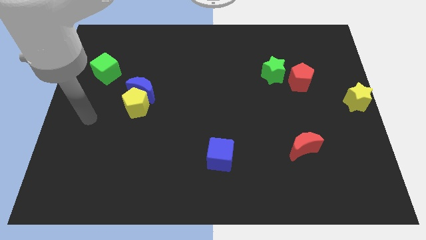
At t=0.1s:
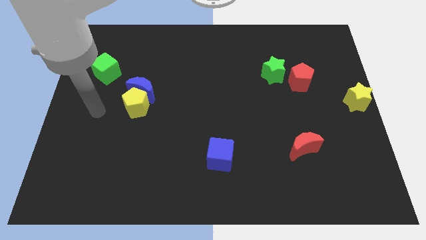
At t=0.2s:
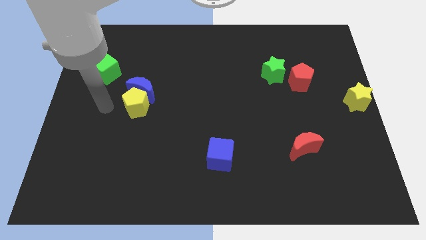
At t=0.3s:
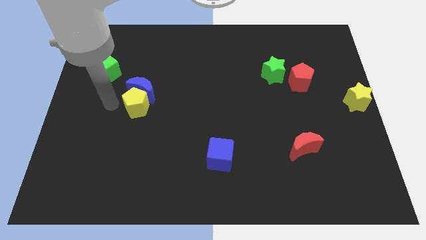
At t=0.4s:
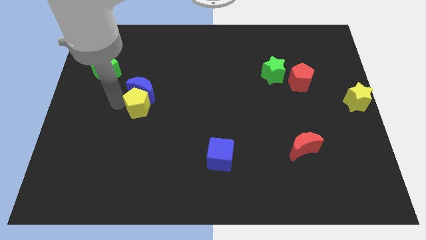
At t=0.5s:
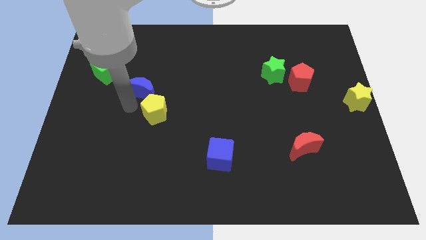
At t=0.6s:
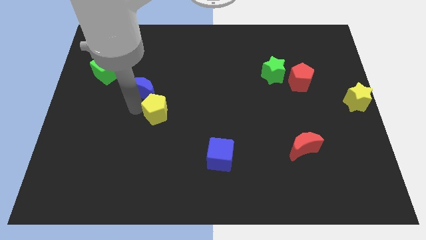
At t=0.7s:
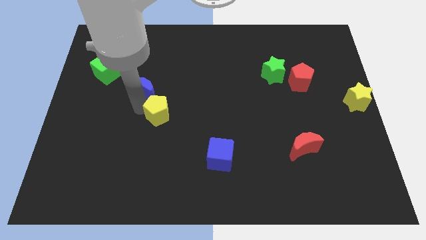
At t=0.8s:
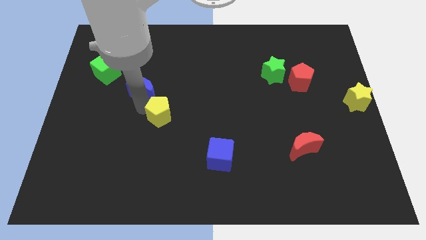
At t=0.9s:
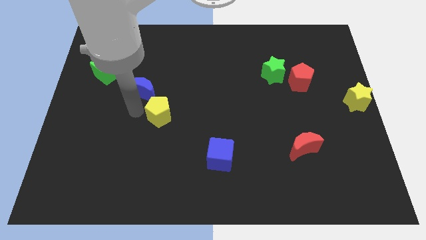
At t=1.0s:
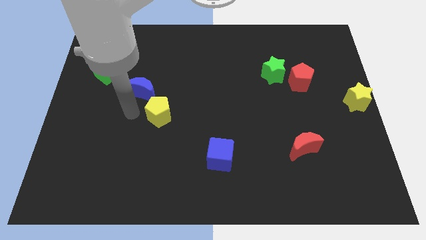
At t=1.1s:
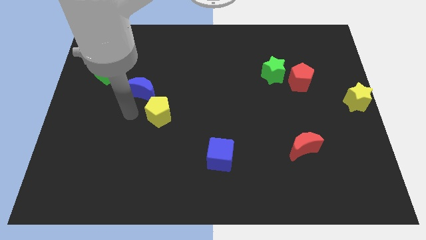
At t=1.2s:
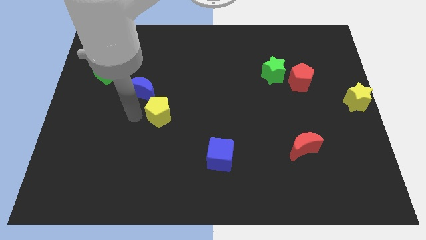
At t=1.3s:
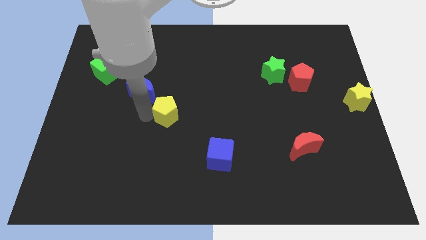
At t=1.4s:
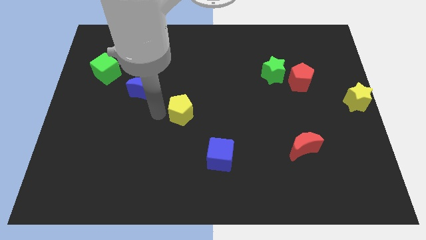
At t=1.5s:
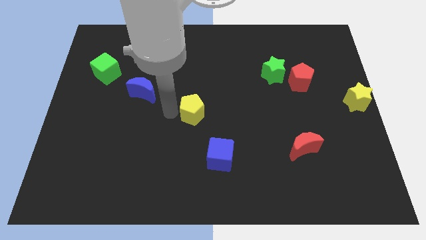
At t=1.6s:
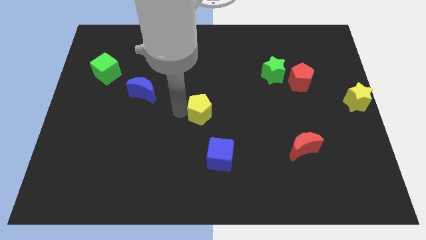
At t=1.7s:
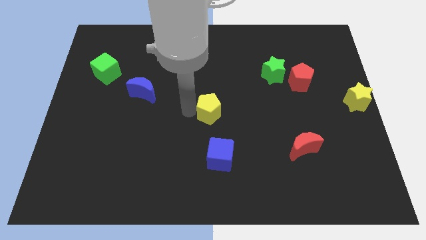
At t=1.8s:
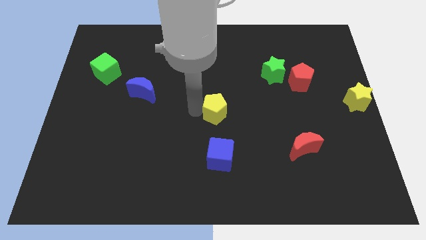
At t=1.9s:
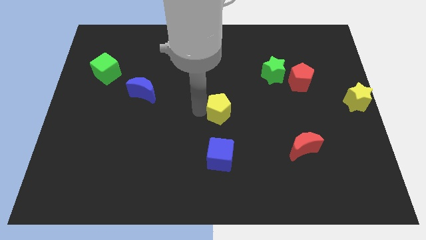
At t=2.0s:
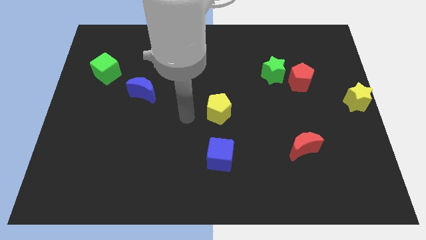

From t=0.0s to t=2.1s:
slide yellow pentagon to the top of blue cube

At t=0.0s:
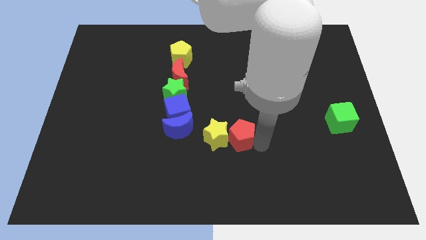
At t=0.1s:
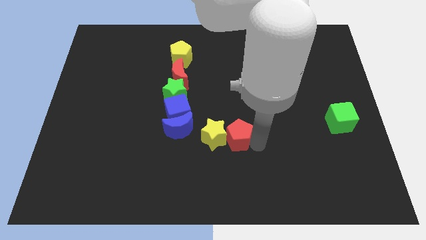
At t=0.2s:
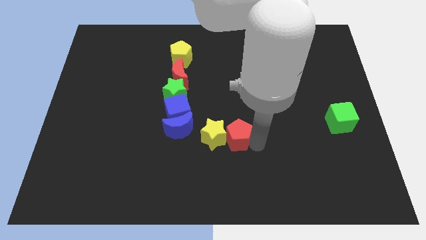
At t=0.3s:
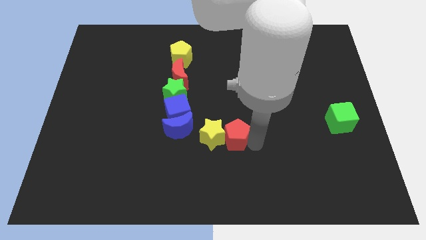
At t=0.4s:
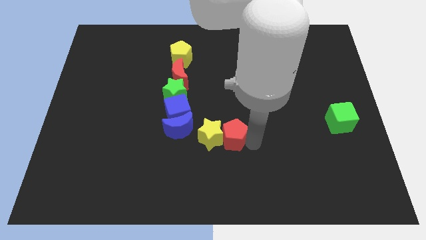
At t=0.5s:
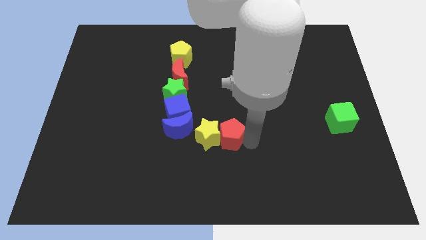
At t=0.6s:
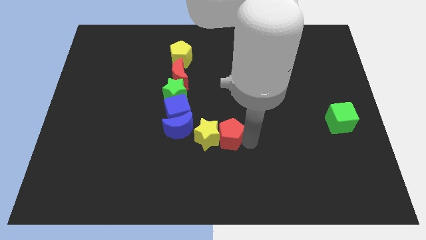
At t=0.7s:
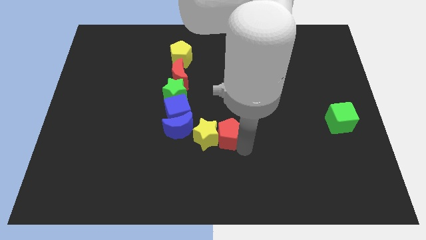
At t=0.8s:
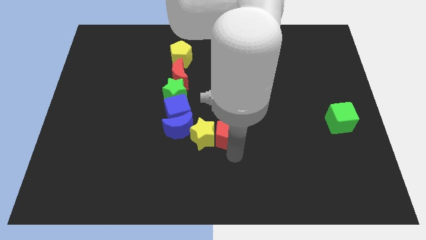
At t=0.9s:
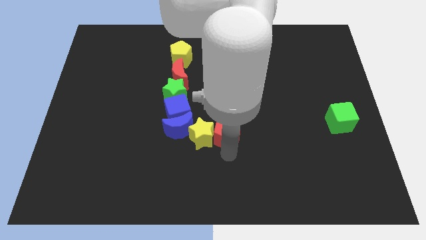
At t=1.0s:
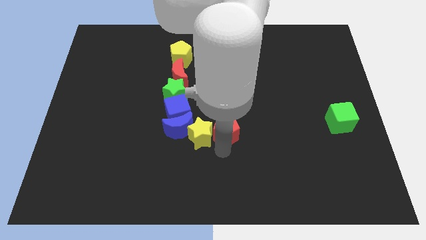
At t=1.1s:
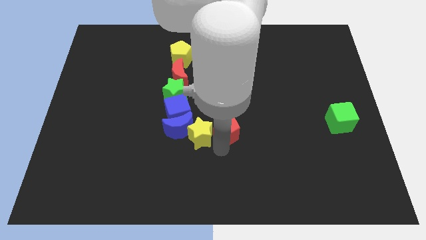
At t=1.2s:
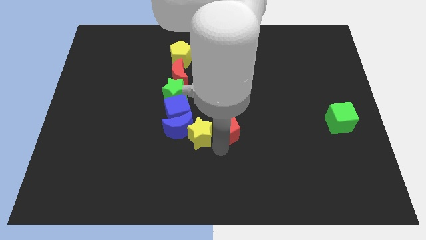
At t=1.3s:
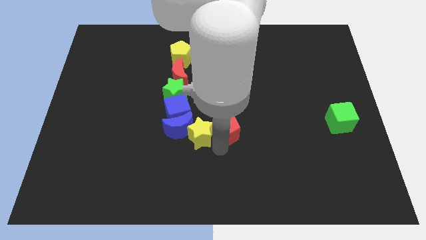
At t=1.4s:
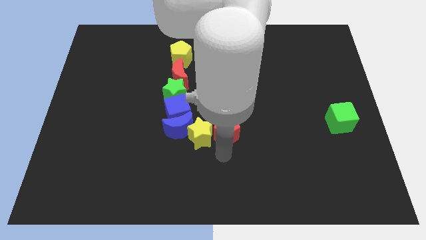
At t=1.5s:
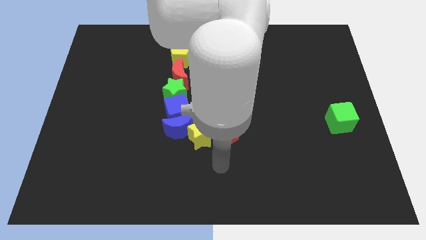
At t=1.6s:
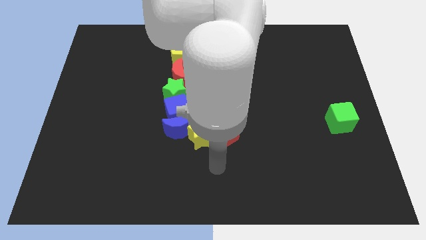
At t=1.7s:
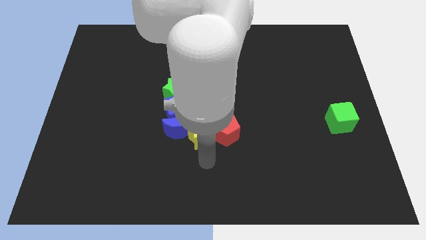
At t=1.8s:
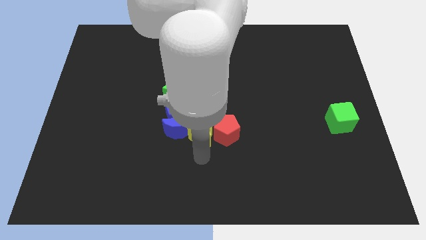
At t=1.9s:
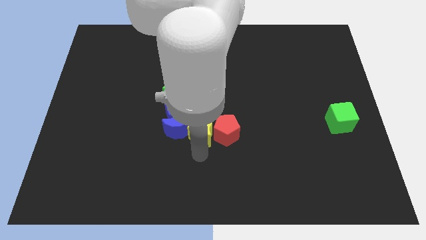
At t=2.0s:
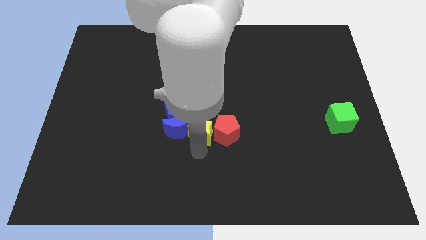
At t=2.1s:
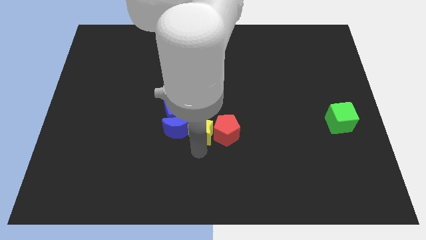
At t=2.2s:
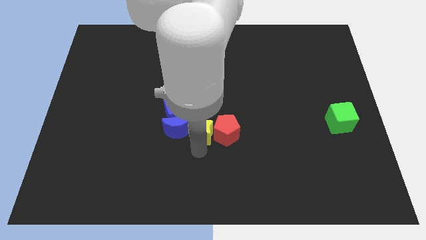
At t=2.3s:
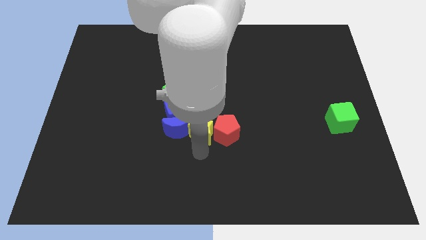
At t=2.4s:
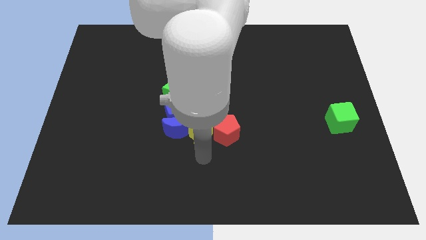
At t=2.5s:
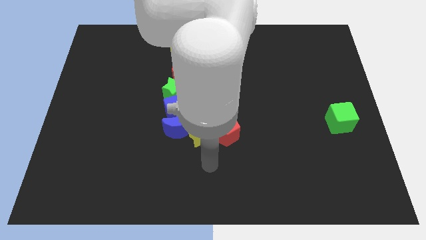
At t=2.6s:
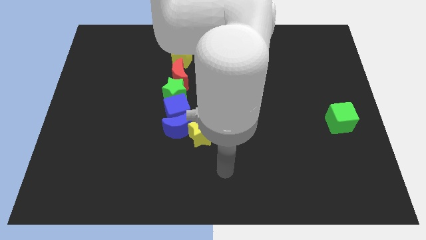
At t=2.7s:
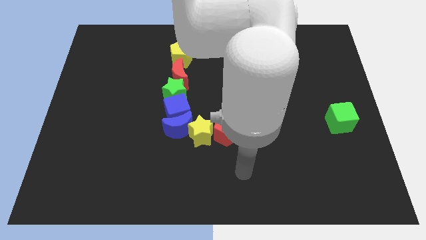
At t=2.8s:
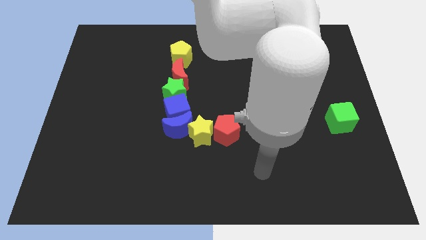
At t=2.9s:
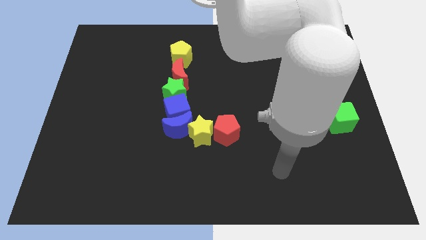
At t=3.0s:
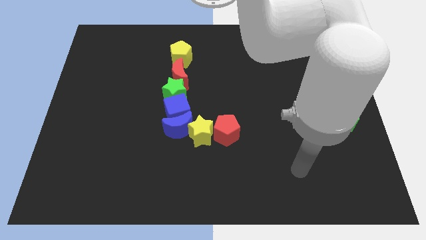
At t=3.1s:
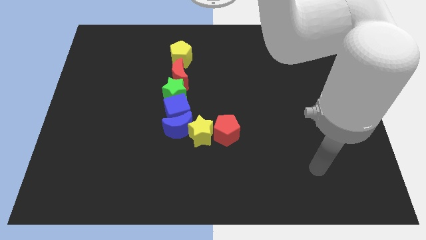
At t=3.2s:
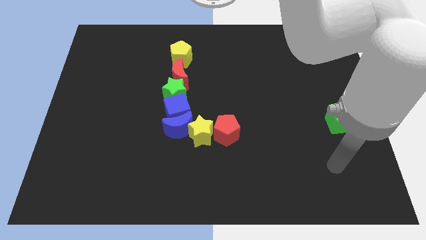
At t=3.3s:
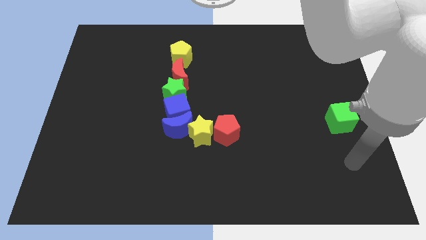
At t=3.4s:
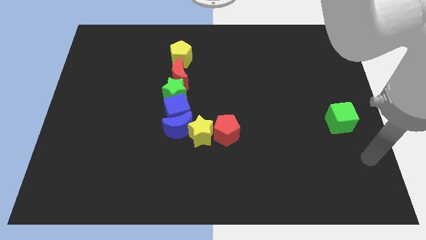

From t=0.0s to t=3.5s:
move the yellow star and the red pentagon parallel to the left of the green cube

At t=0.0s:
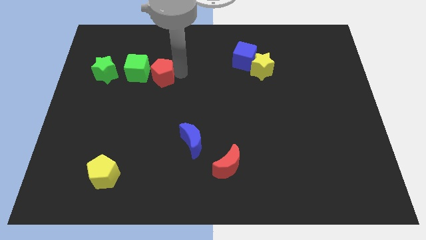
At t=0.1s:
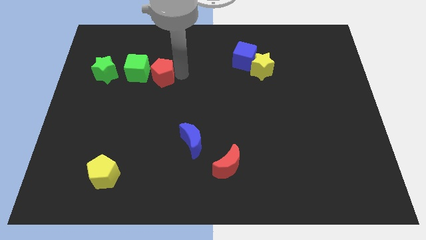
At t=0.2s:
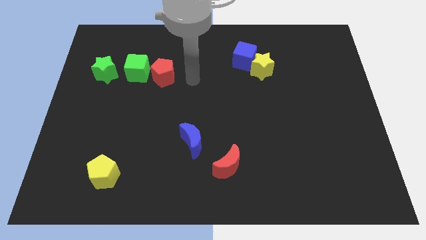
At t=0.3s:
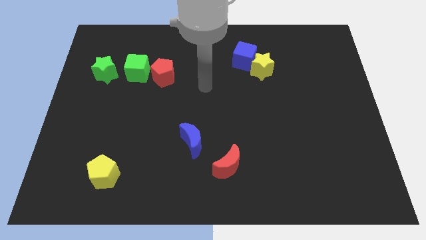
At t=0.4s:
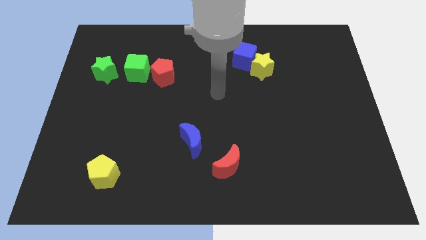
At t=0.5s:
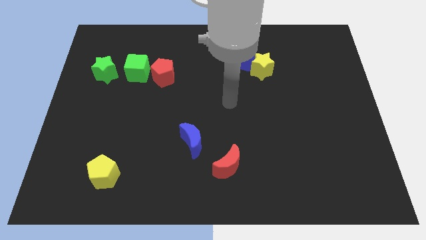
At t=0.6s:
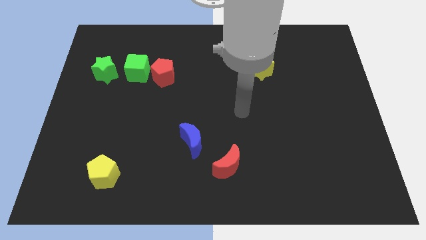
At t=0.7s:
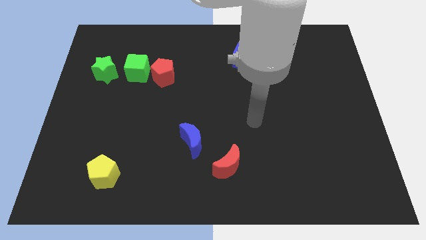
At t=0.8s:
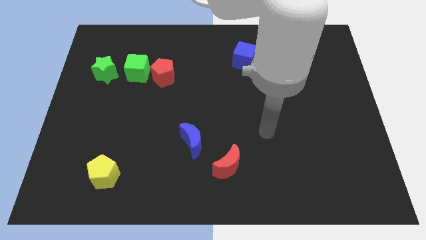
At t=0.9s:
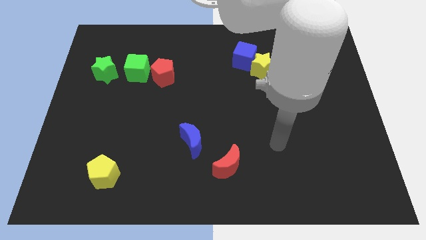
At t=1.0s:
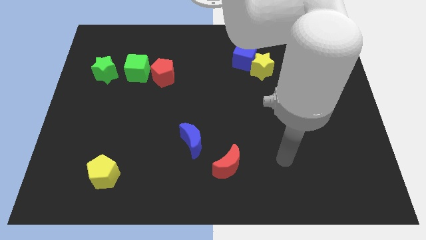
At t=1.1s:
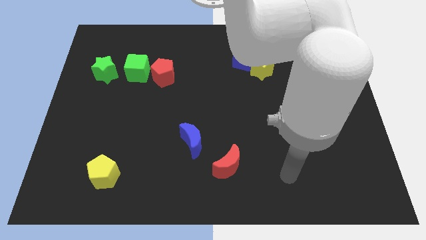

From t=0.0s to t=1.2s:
move your arm away form red pentagon

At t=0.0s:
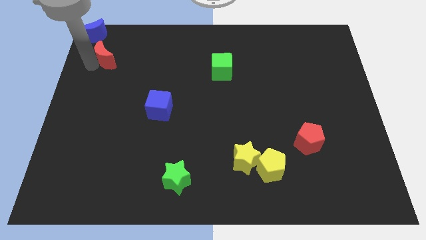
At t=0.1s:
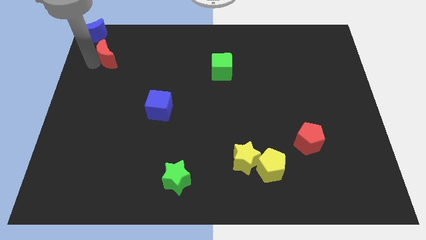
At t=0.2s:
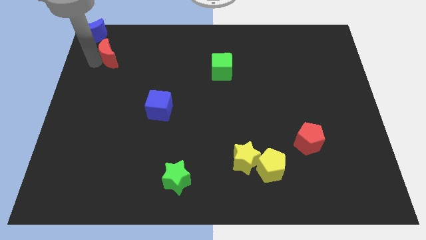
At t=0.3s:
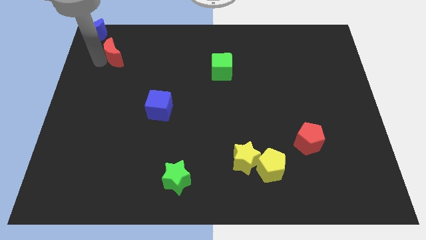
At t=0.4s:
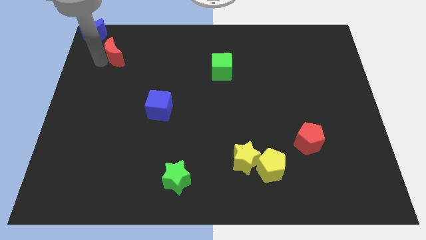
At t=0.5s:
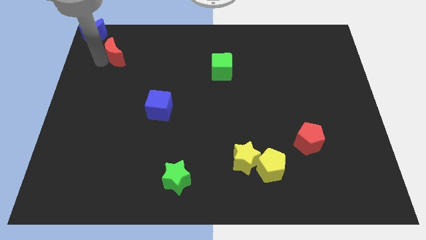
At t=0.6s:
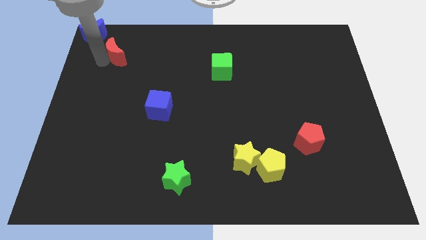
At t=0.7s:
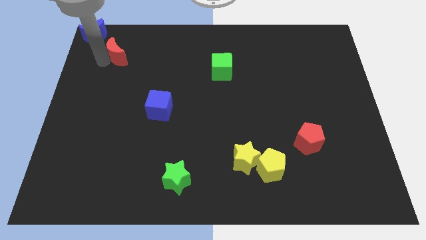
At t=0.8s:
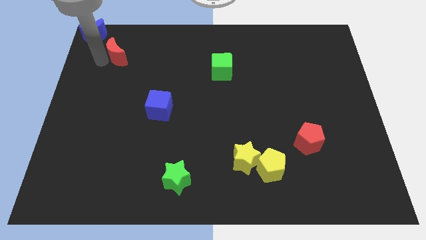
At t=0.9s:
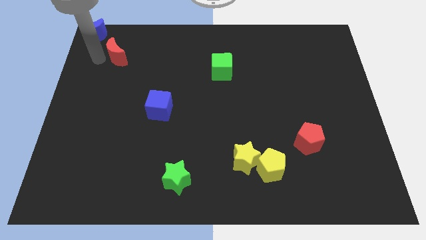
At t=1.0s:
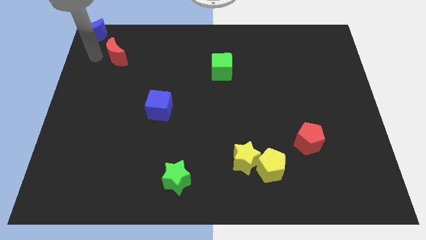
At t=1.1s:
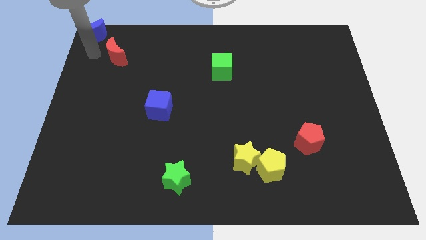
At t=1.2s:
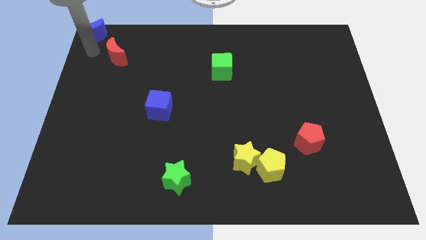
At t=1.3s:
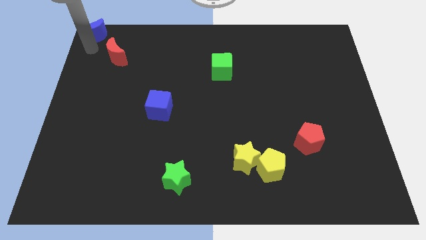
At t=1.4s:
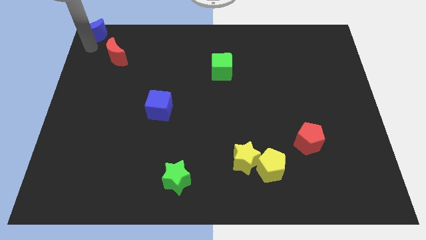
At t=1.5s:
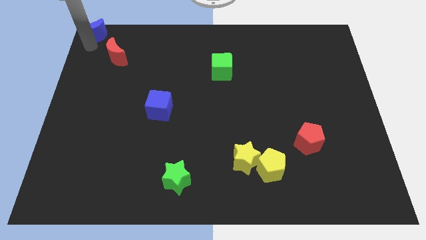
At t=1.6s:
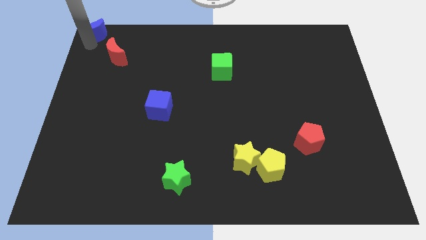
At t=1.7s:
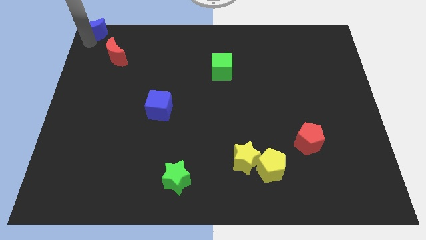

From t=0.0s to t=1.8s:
move the red crescent to the bottom right side of the blue moon

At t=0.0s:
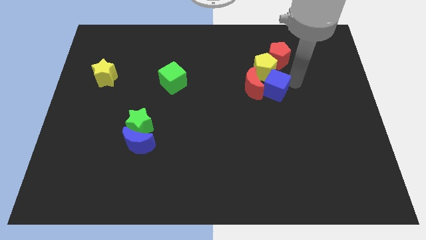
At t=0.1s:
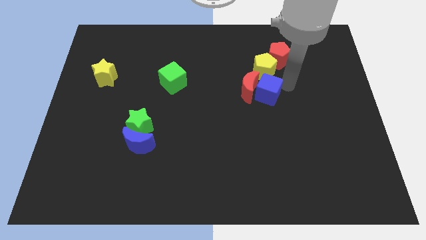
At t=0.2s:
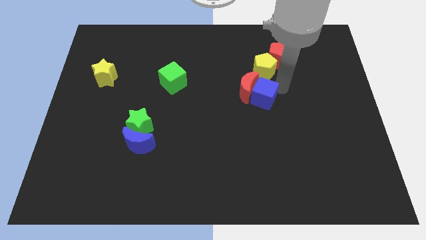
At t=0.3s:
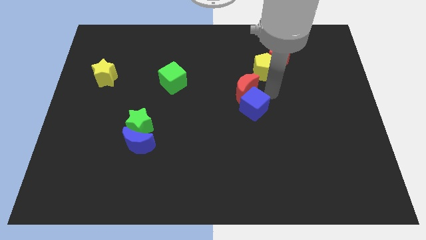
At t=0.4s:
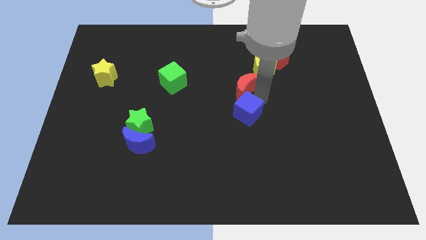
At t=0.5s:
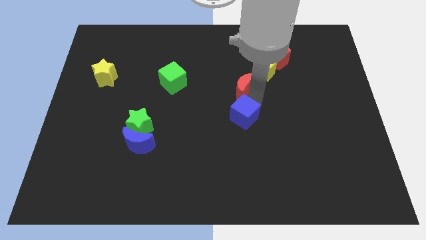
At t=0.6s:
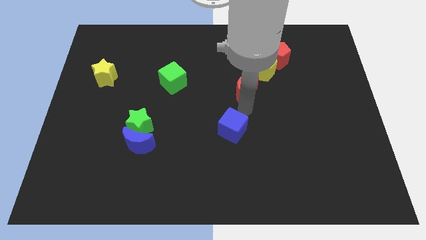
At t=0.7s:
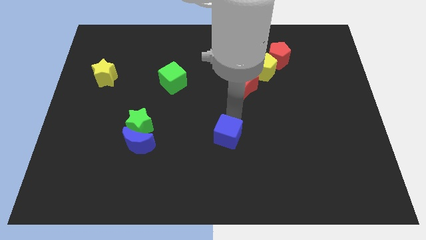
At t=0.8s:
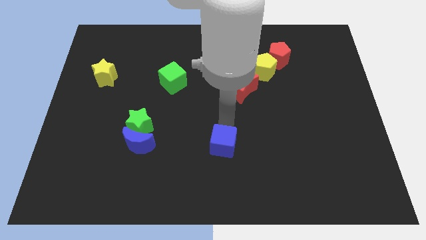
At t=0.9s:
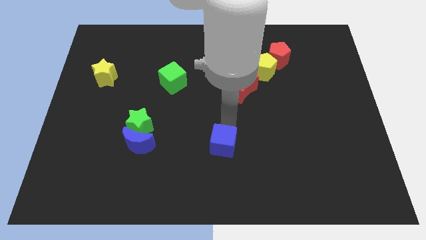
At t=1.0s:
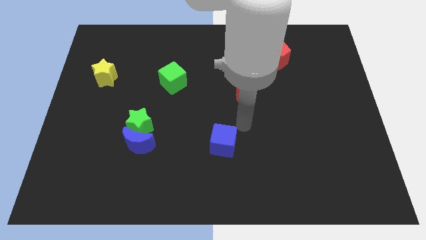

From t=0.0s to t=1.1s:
move the blue cube away from the red crescent
